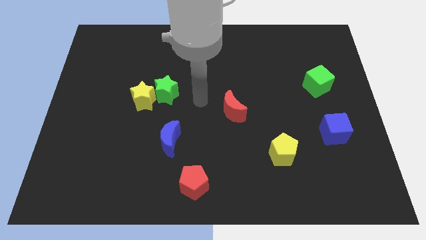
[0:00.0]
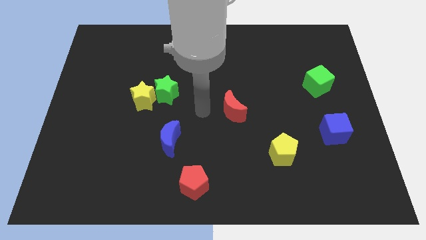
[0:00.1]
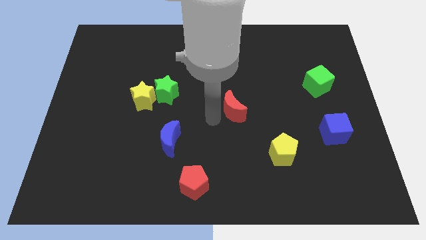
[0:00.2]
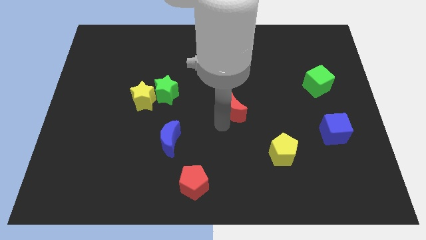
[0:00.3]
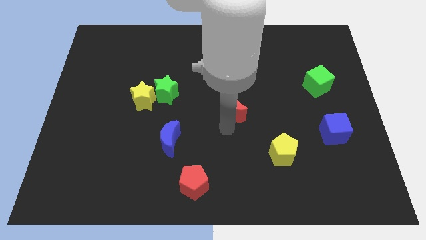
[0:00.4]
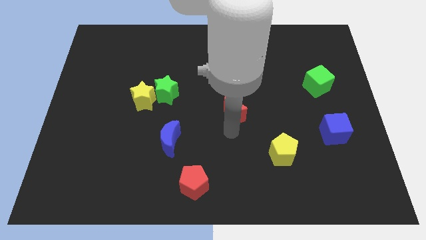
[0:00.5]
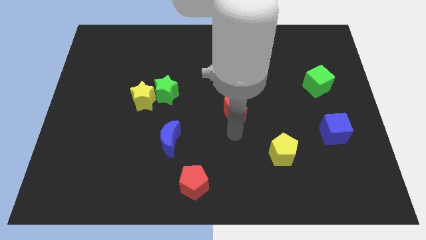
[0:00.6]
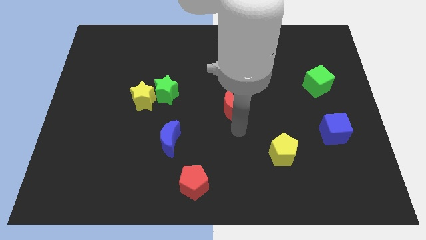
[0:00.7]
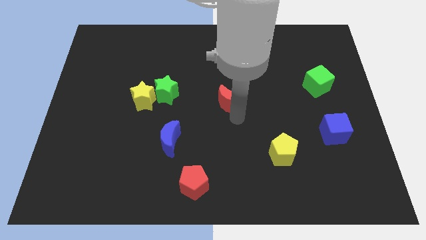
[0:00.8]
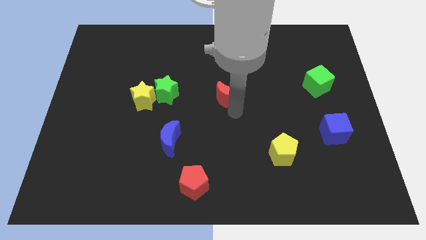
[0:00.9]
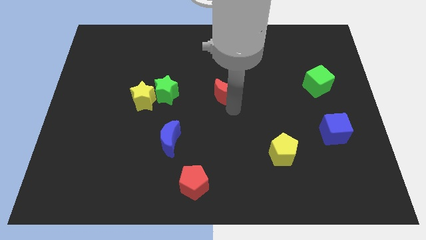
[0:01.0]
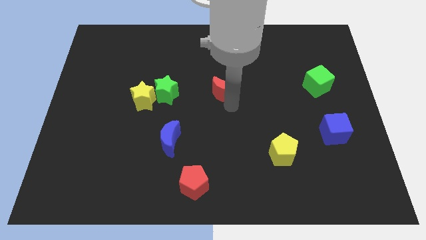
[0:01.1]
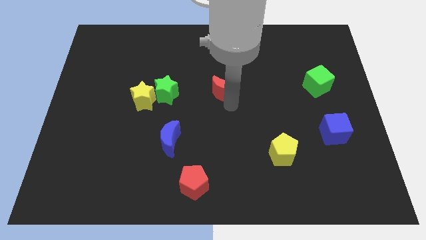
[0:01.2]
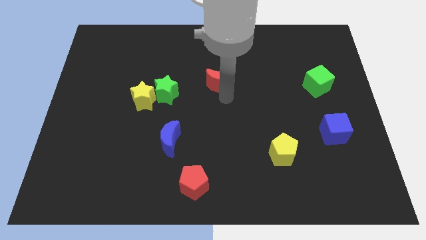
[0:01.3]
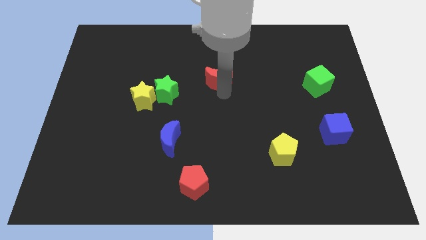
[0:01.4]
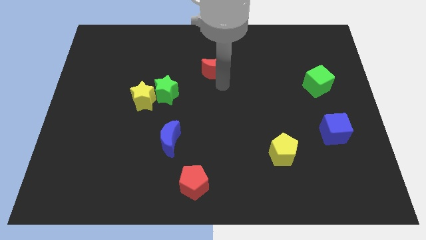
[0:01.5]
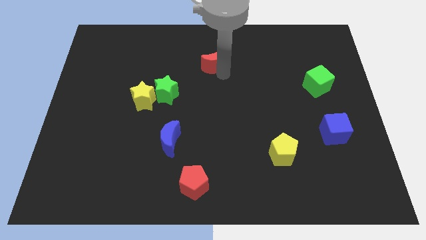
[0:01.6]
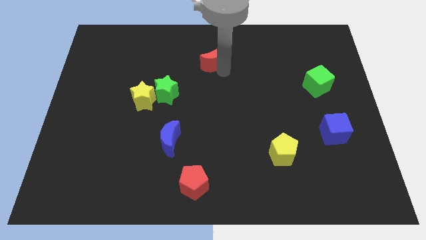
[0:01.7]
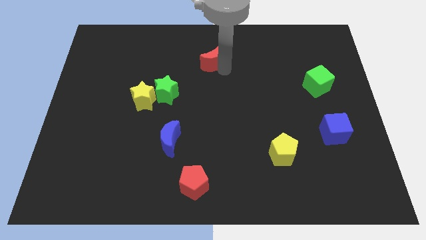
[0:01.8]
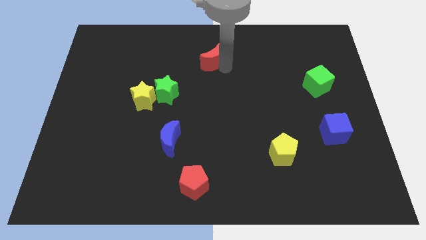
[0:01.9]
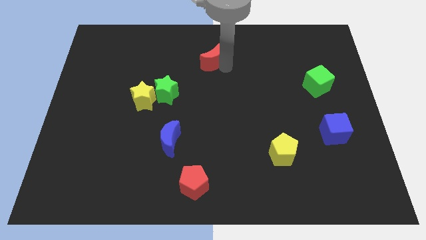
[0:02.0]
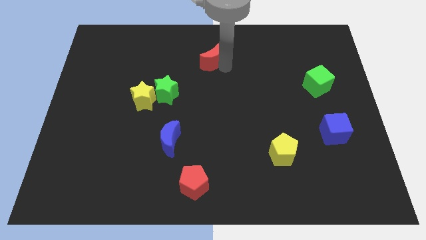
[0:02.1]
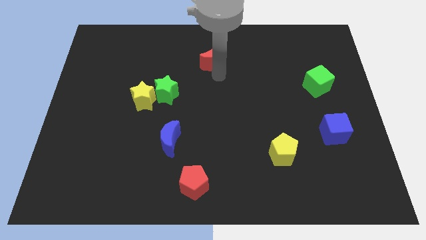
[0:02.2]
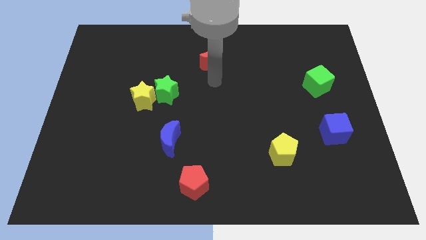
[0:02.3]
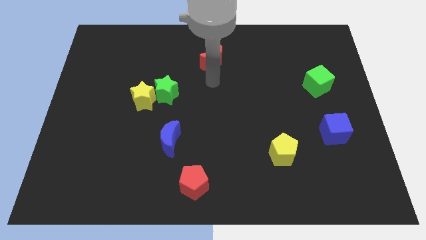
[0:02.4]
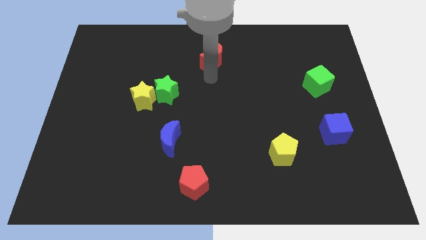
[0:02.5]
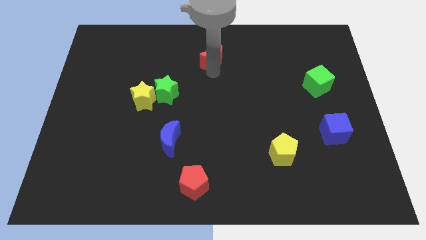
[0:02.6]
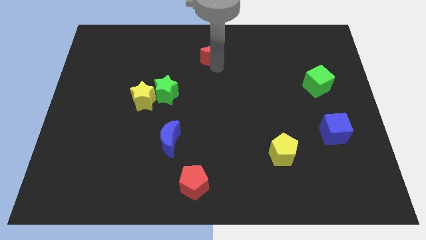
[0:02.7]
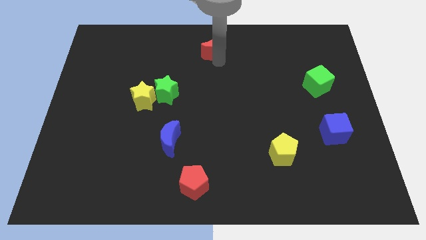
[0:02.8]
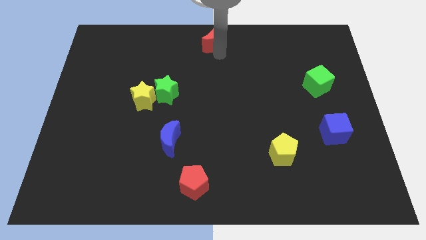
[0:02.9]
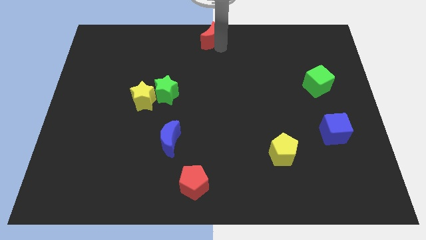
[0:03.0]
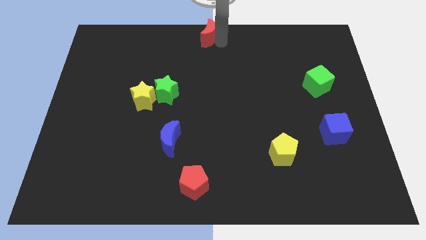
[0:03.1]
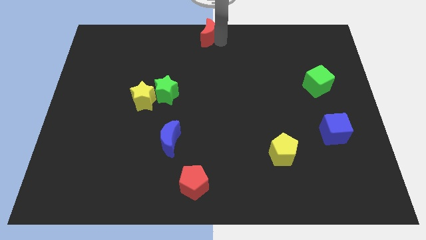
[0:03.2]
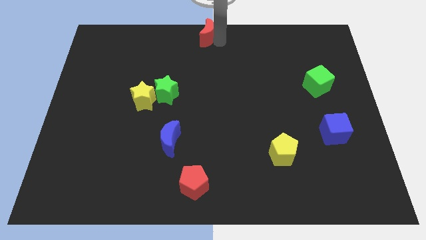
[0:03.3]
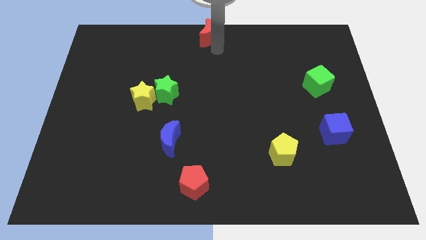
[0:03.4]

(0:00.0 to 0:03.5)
push the red crescent to the top center of the board

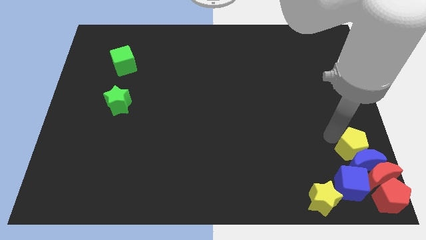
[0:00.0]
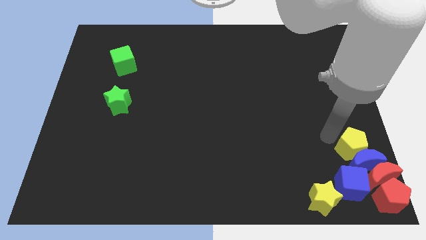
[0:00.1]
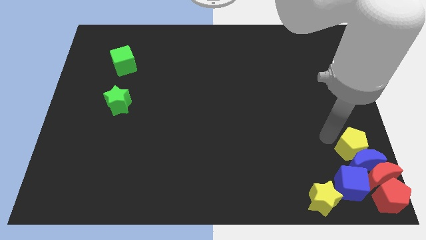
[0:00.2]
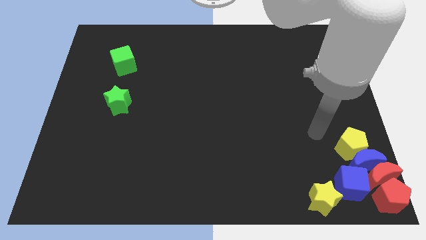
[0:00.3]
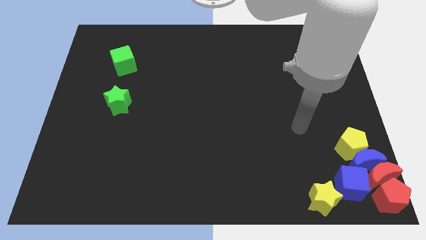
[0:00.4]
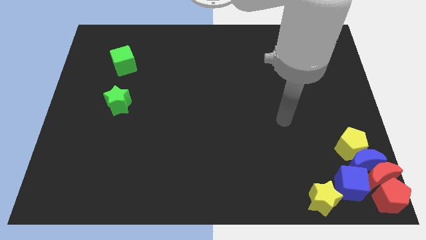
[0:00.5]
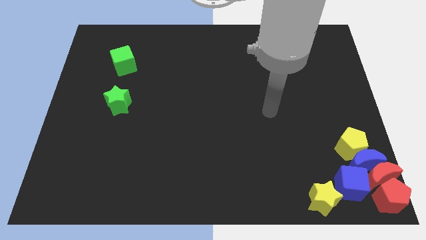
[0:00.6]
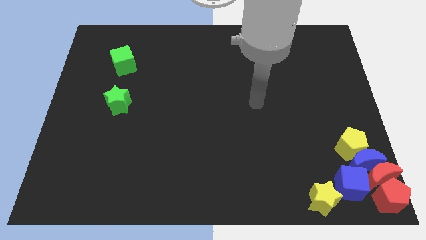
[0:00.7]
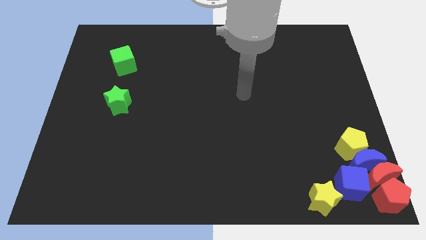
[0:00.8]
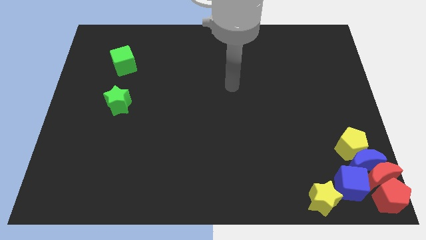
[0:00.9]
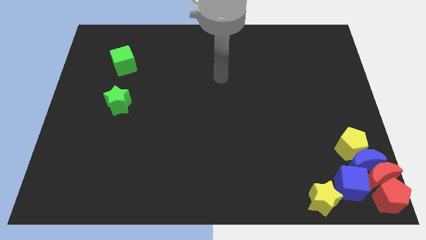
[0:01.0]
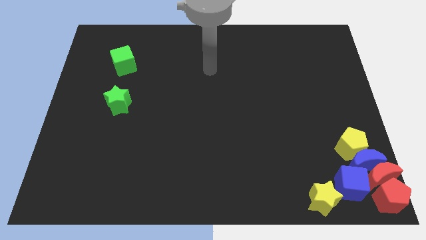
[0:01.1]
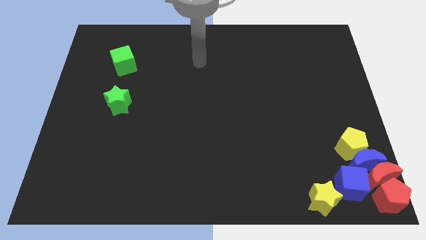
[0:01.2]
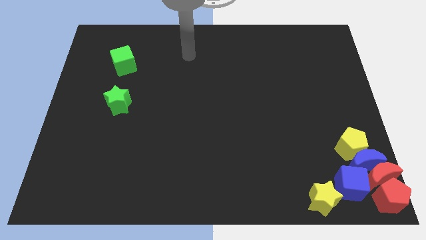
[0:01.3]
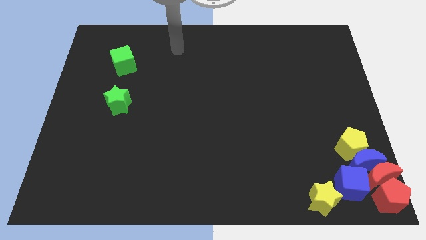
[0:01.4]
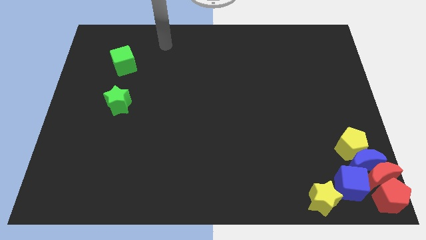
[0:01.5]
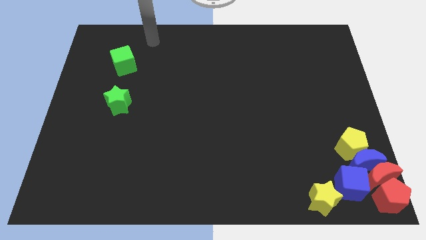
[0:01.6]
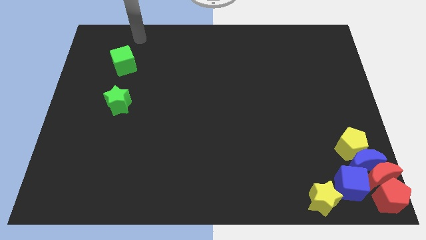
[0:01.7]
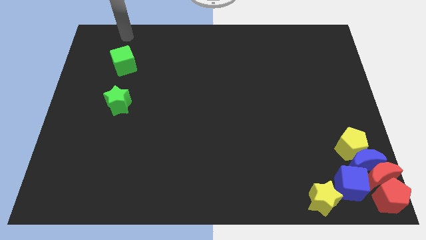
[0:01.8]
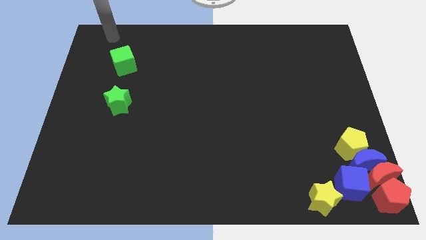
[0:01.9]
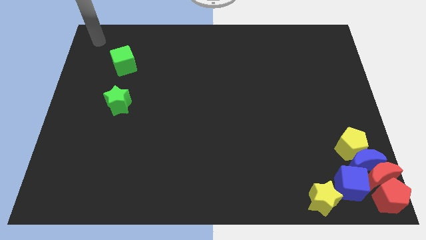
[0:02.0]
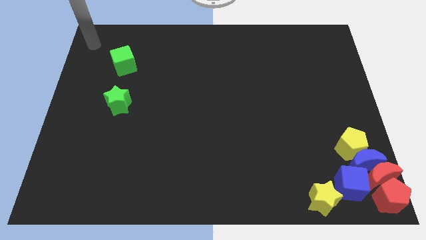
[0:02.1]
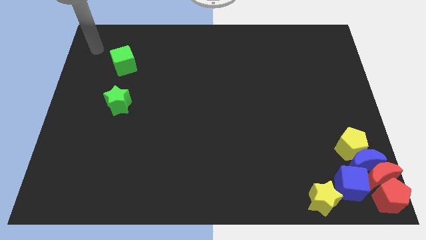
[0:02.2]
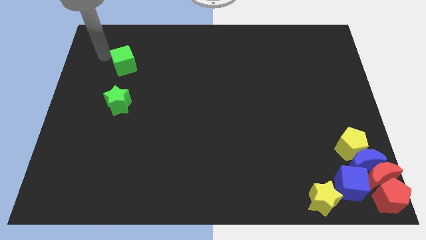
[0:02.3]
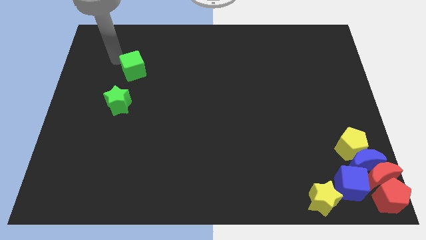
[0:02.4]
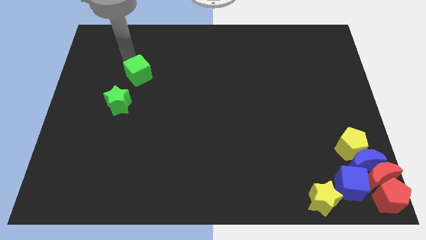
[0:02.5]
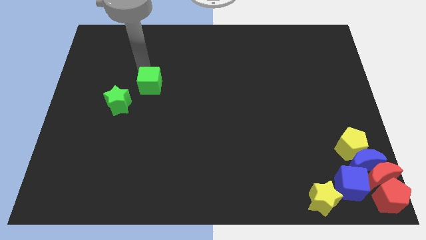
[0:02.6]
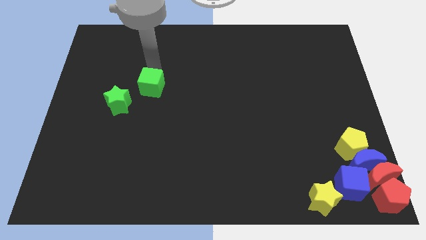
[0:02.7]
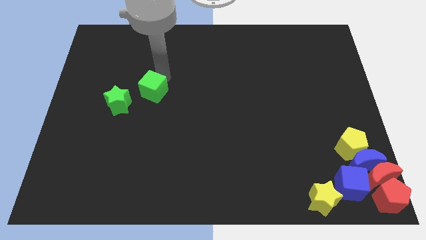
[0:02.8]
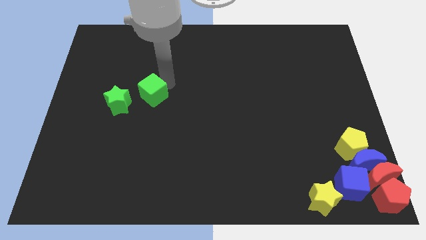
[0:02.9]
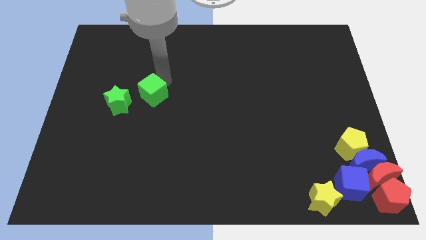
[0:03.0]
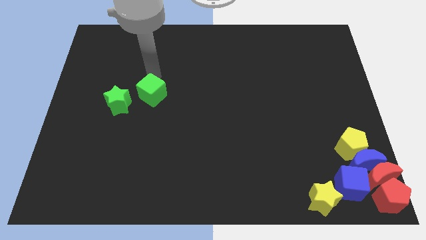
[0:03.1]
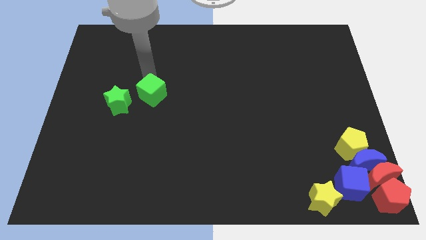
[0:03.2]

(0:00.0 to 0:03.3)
push the green cube close to the green star

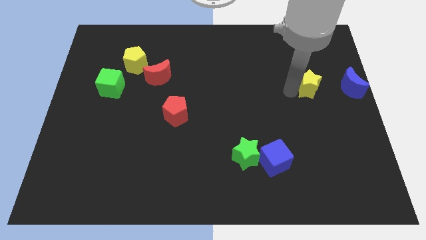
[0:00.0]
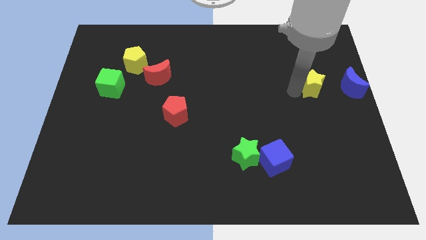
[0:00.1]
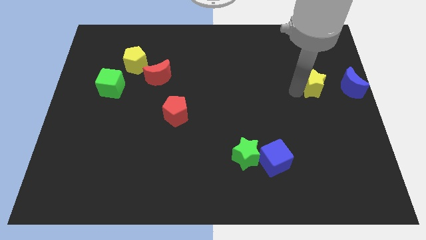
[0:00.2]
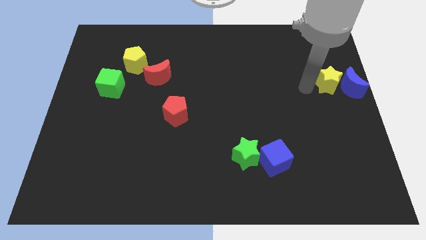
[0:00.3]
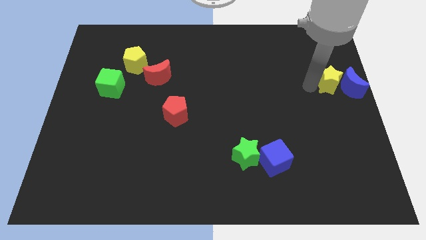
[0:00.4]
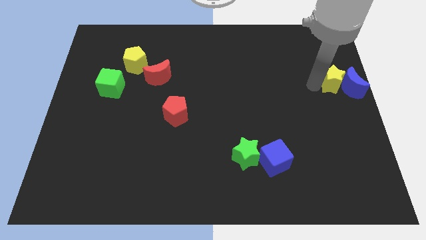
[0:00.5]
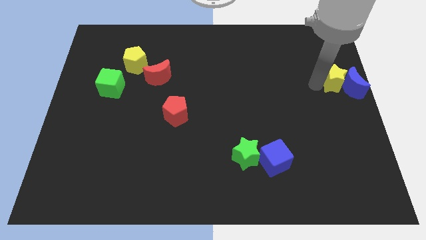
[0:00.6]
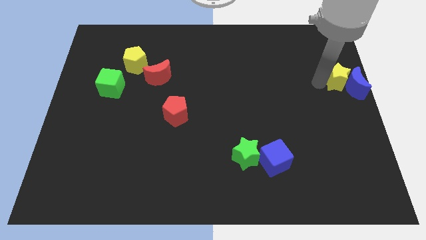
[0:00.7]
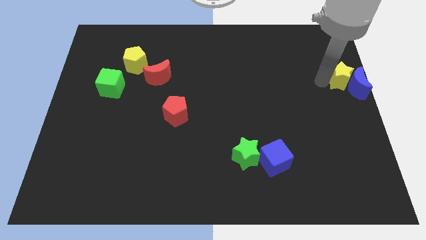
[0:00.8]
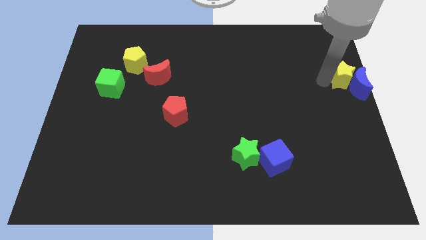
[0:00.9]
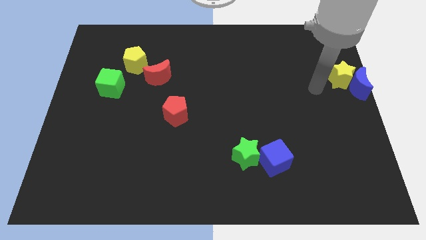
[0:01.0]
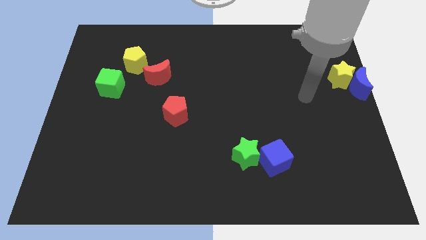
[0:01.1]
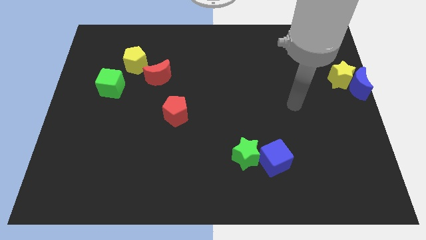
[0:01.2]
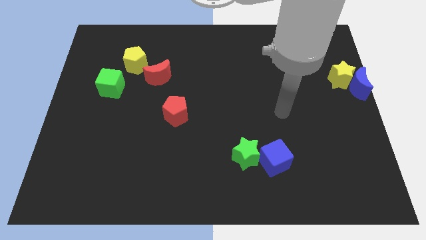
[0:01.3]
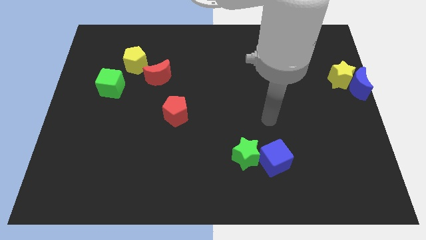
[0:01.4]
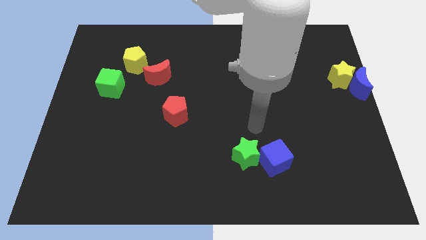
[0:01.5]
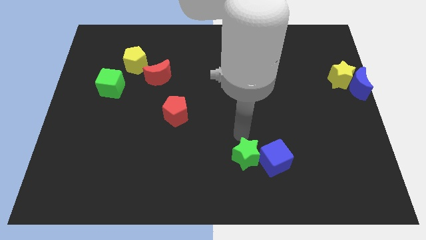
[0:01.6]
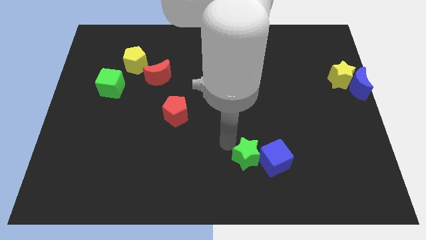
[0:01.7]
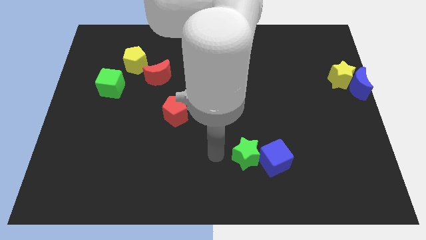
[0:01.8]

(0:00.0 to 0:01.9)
place the yellow star into the blue crescent

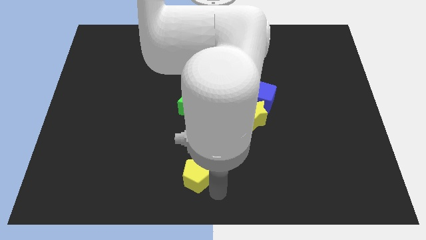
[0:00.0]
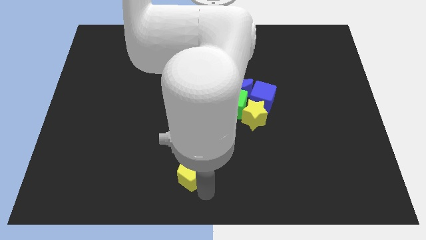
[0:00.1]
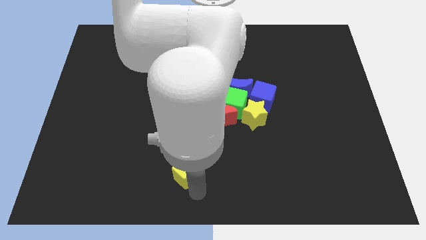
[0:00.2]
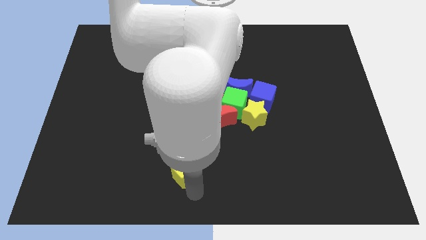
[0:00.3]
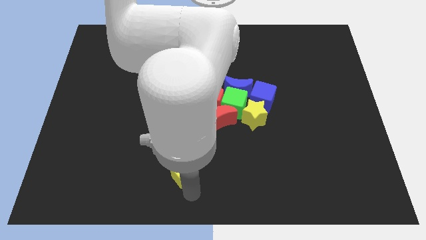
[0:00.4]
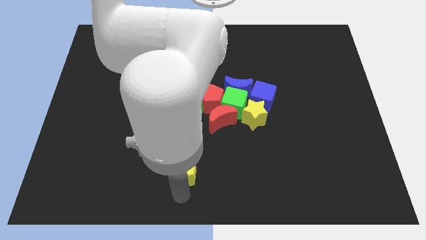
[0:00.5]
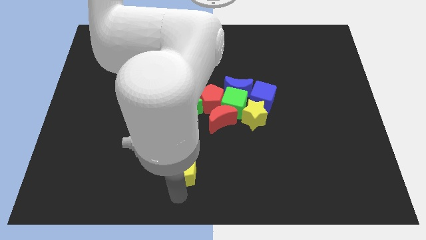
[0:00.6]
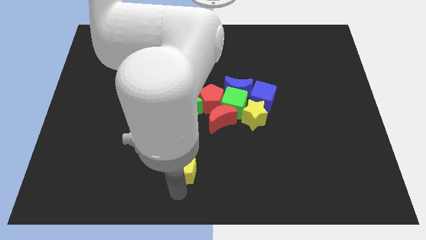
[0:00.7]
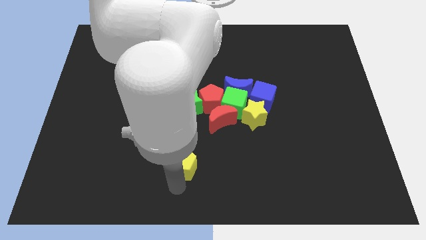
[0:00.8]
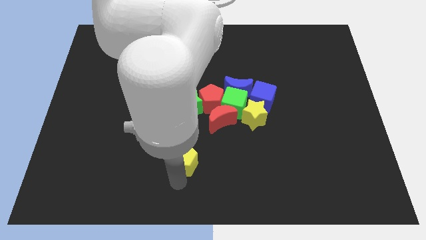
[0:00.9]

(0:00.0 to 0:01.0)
push the yellow pentagon towards the group of blocks
